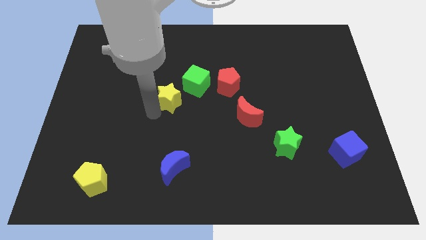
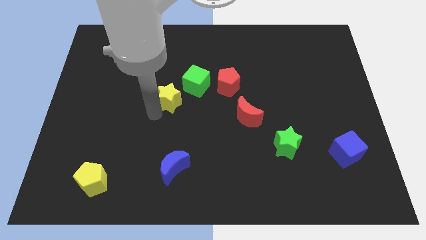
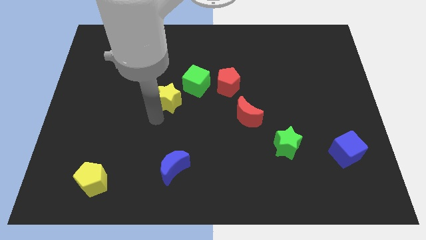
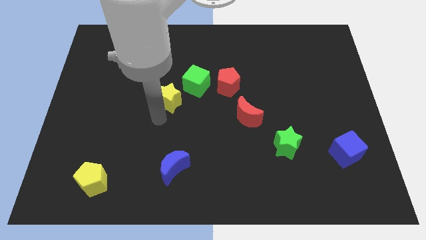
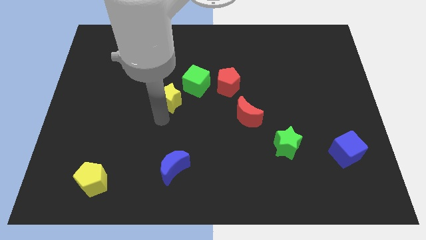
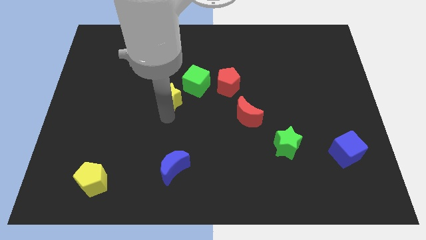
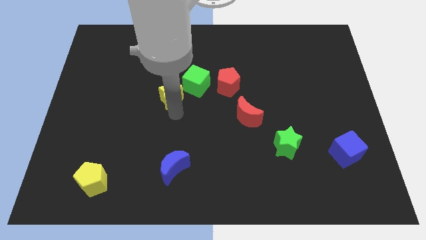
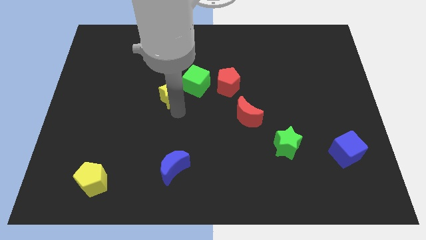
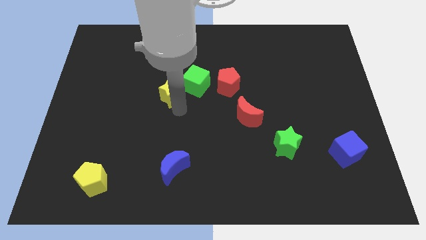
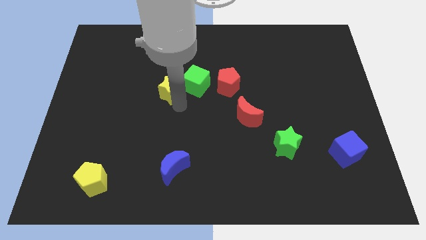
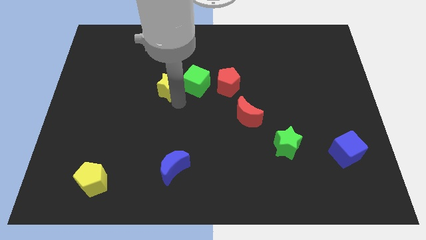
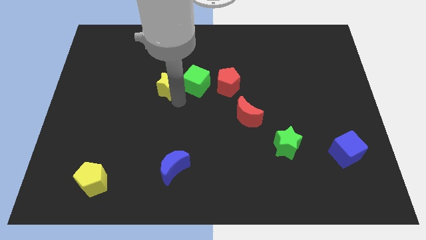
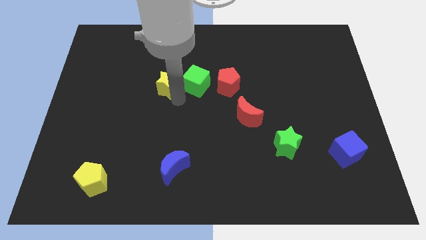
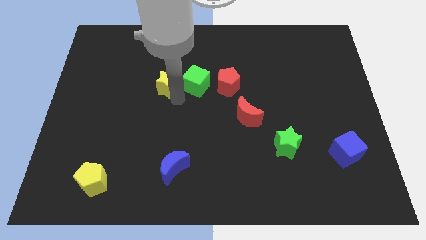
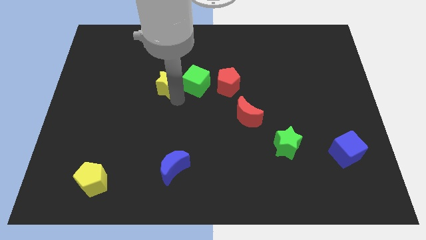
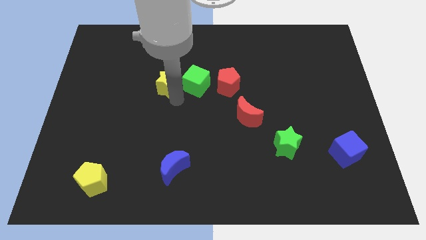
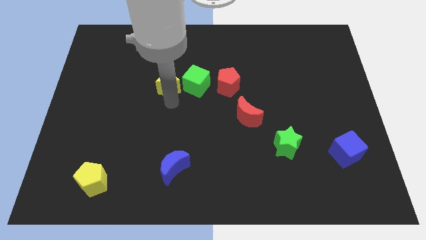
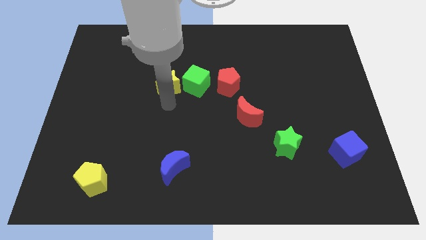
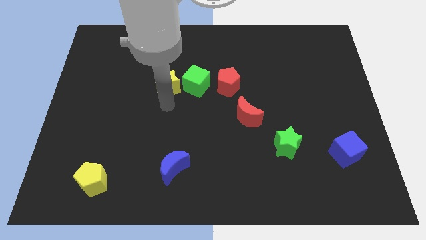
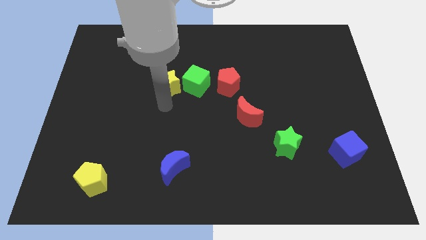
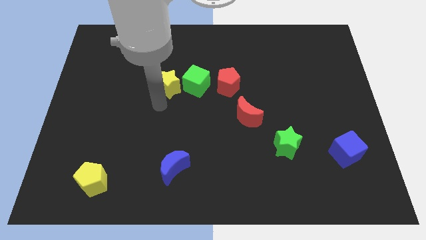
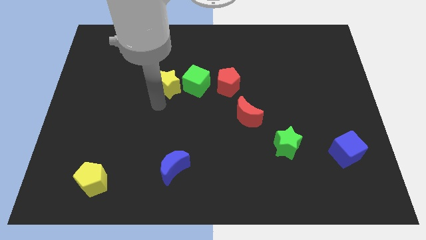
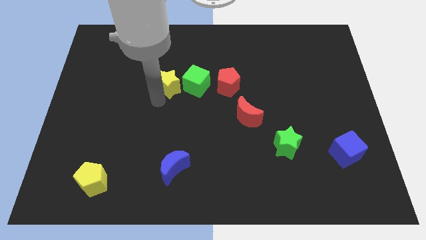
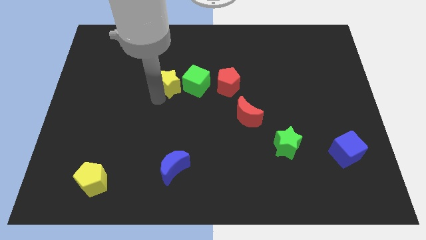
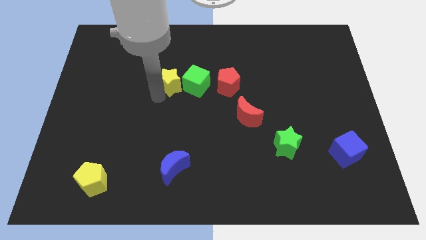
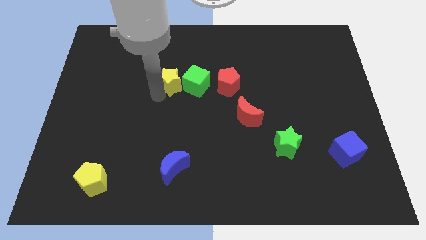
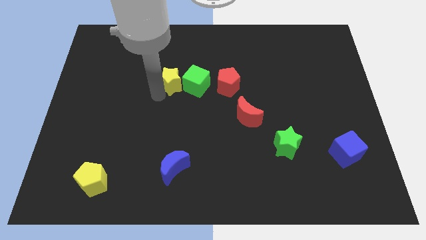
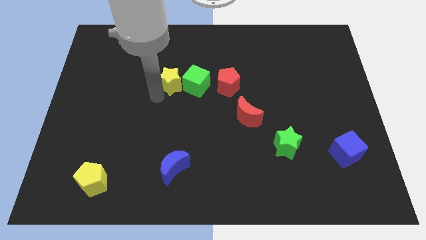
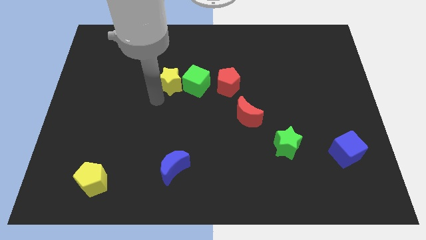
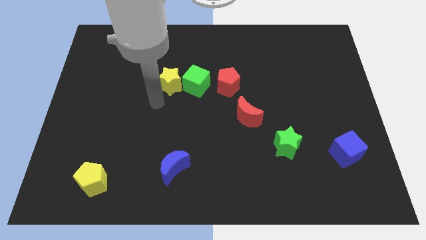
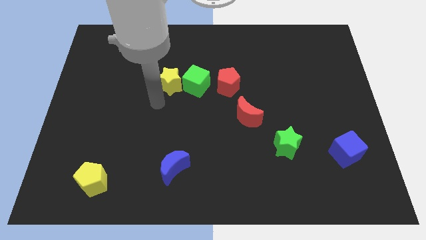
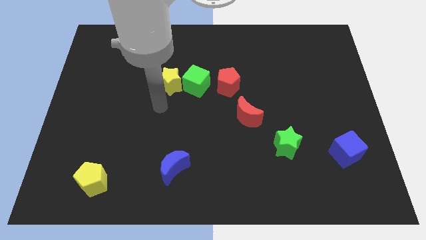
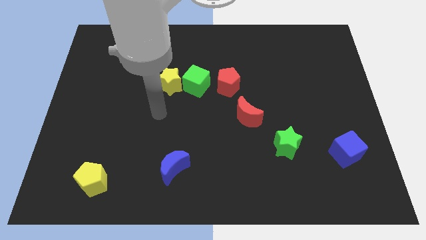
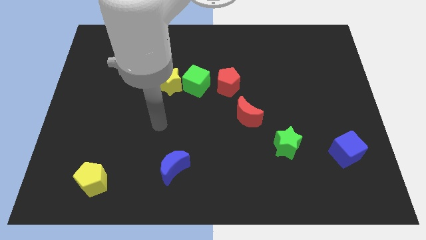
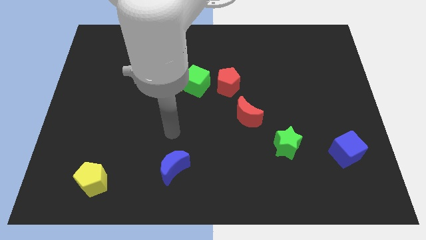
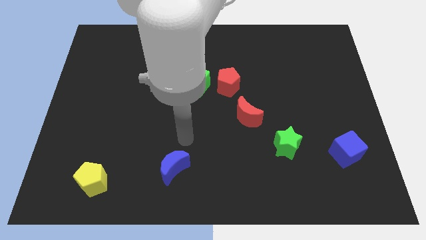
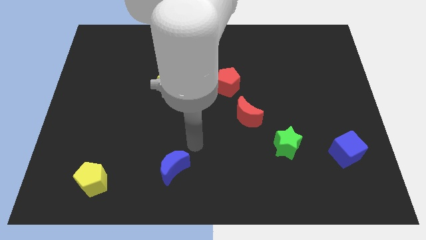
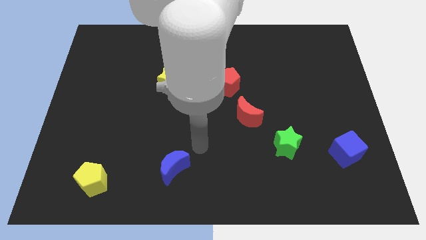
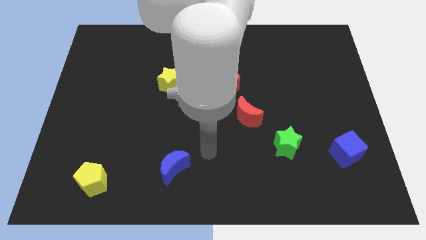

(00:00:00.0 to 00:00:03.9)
place a yellow star adjacent to the green cube

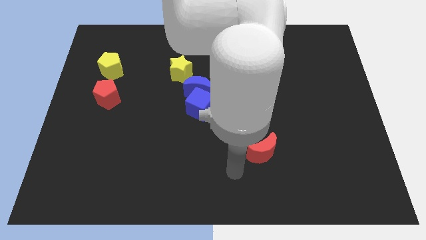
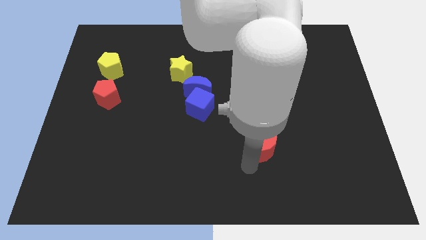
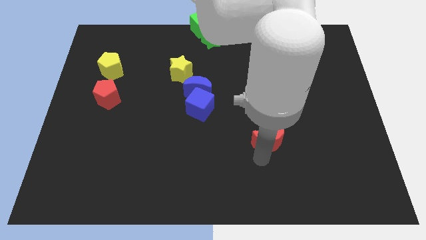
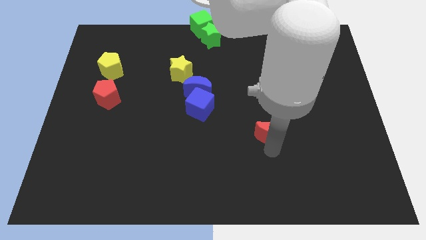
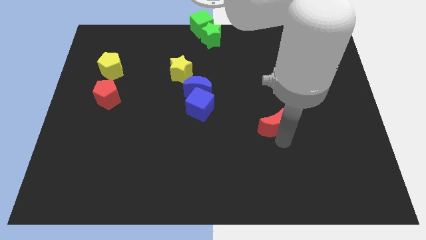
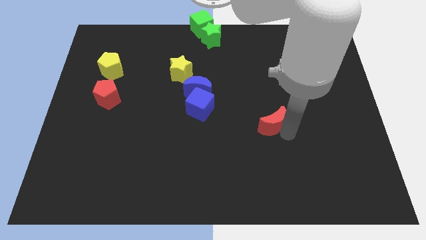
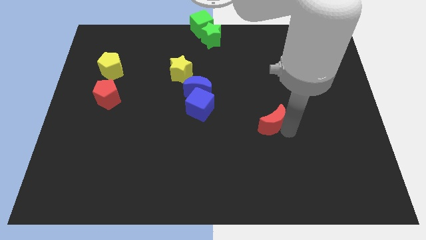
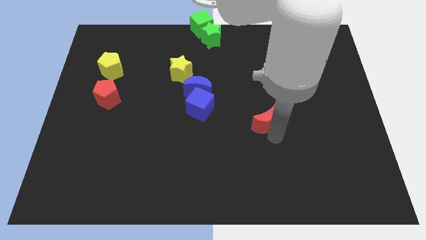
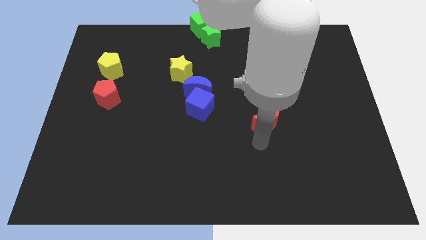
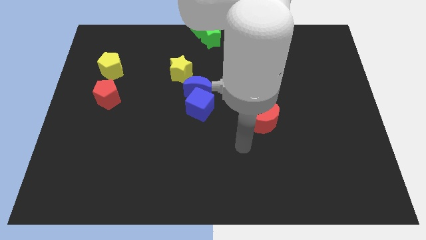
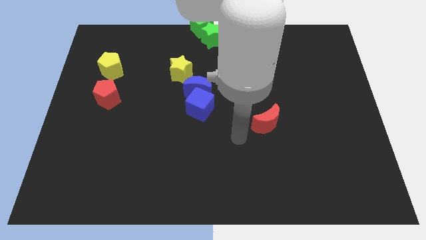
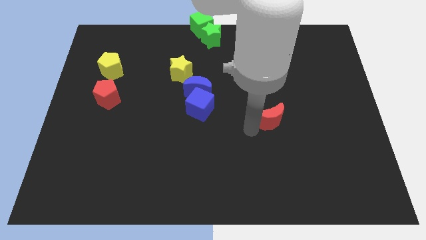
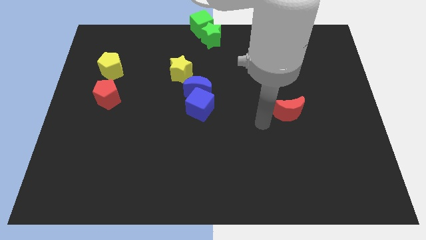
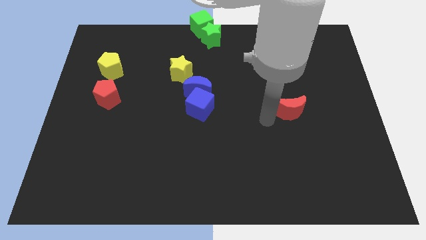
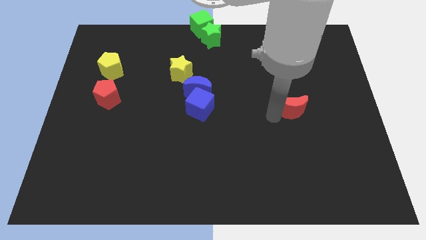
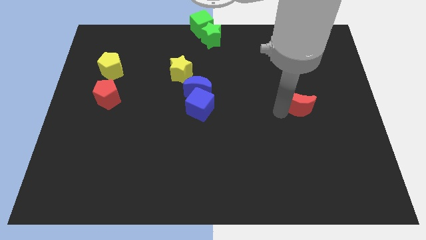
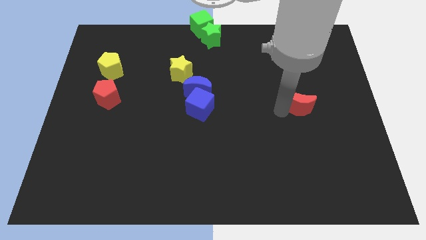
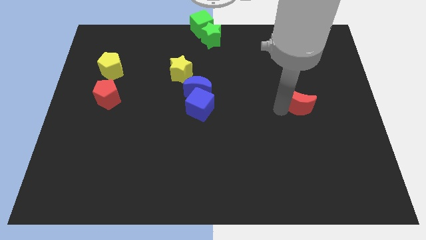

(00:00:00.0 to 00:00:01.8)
pull the red crescent to the right of the blue cube

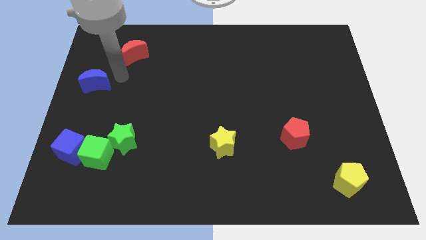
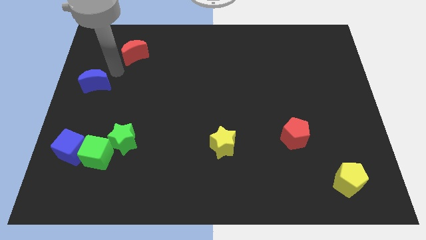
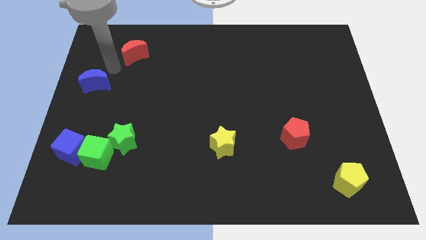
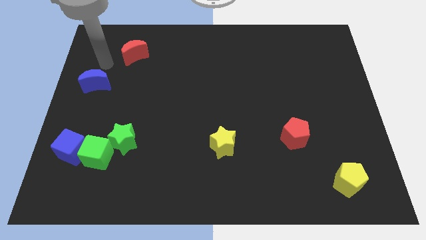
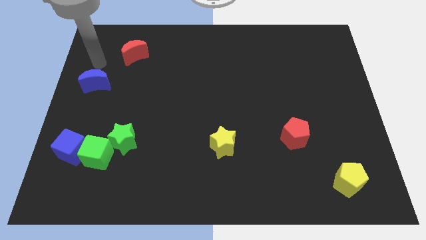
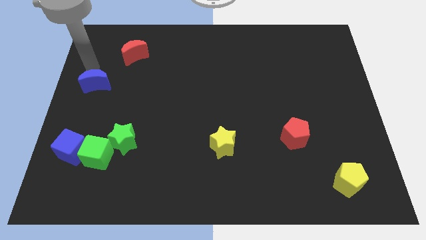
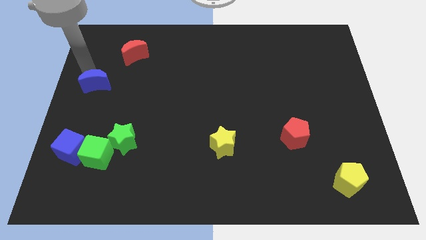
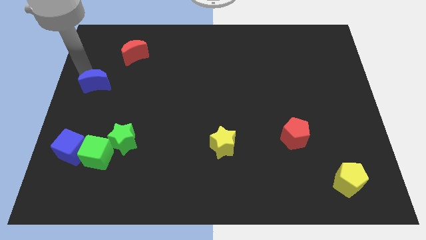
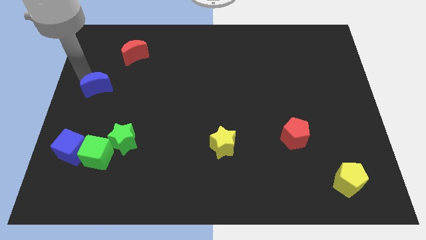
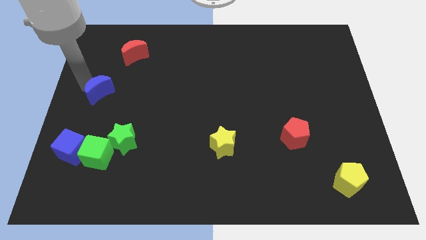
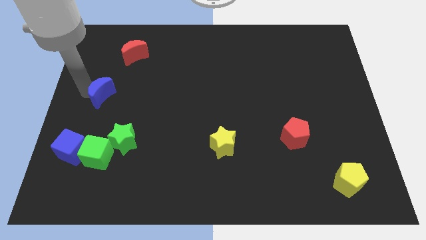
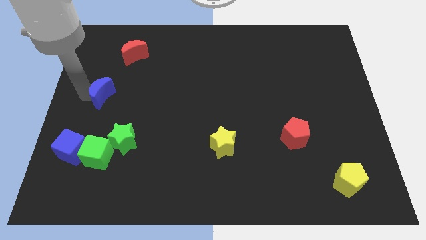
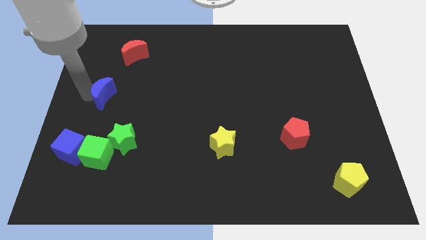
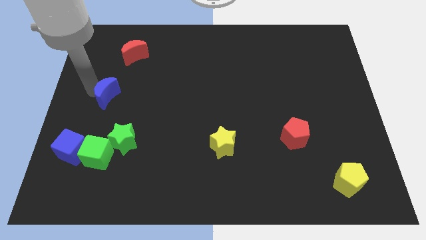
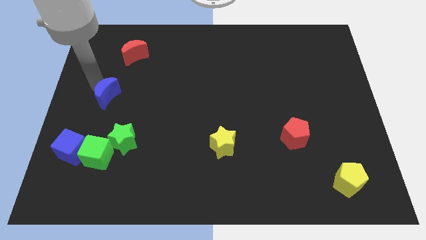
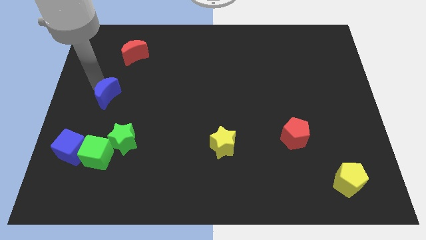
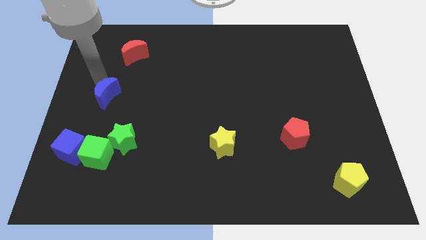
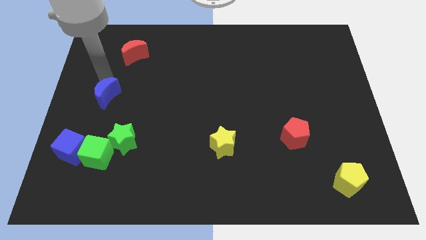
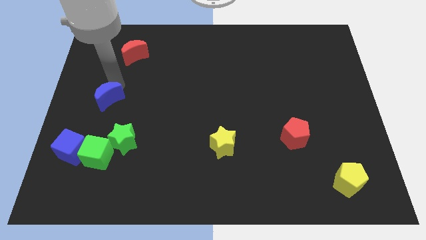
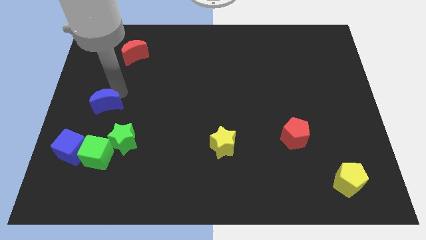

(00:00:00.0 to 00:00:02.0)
move the blue cube towards the blue cube

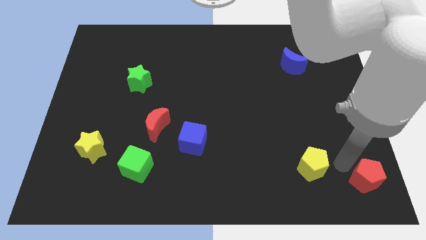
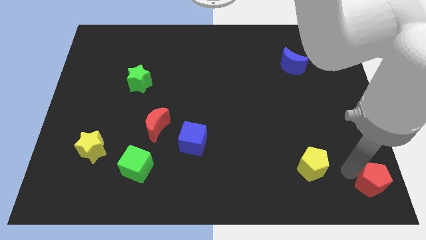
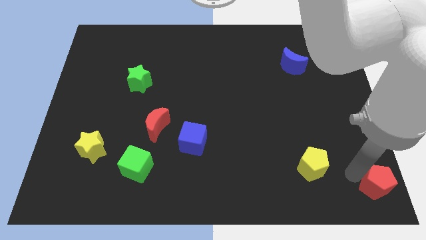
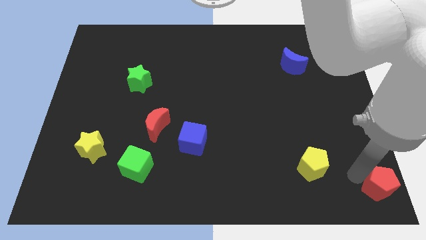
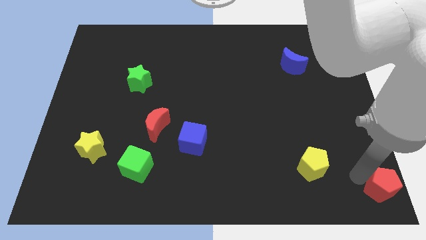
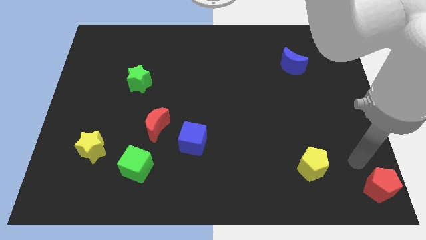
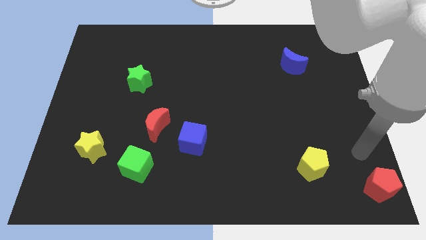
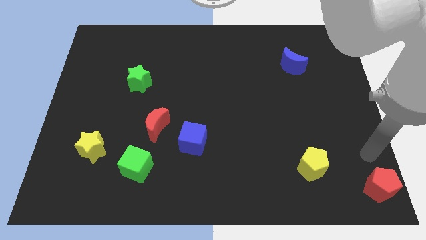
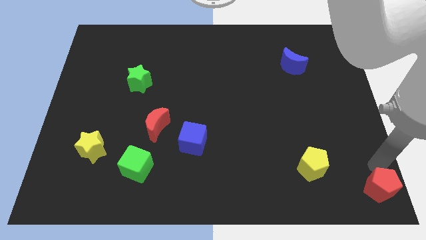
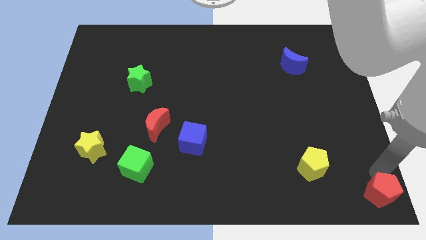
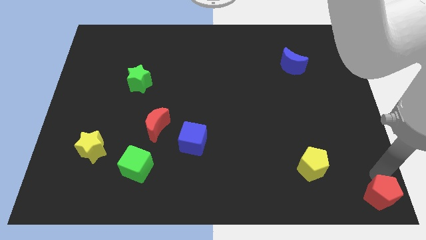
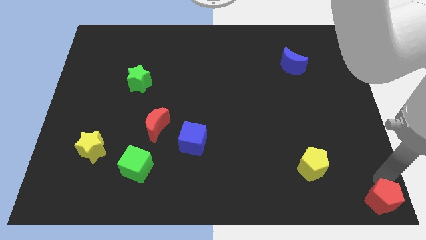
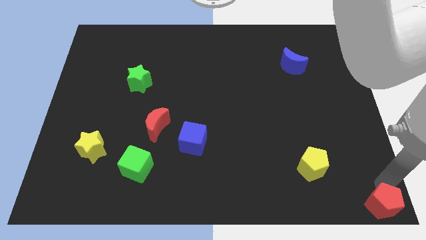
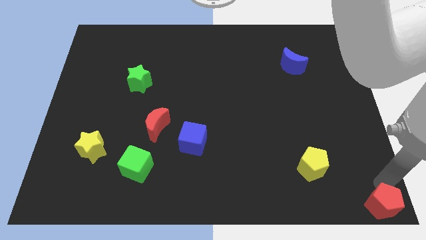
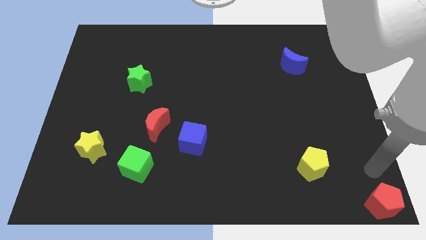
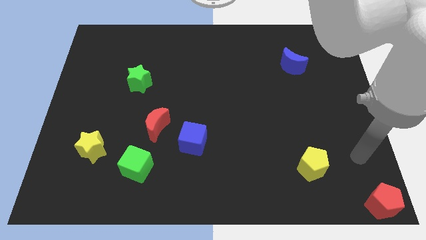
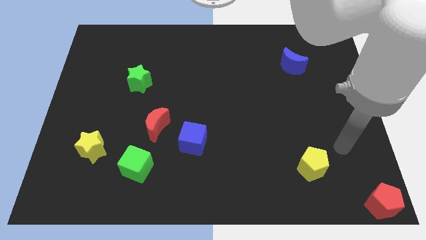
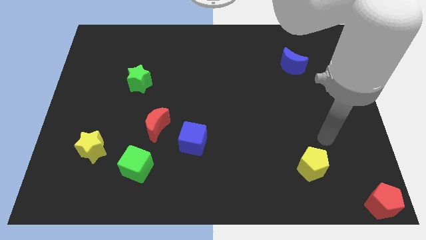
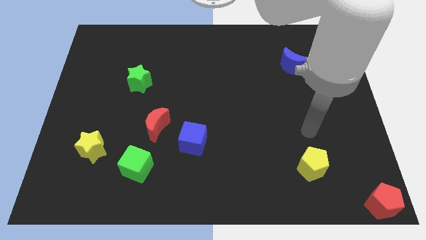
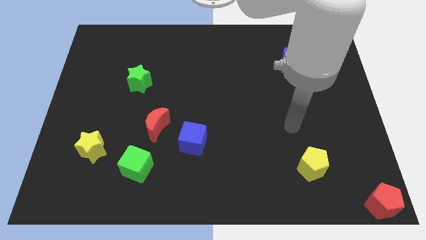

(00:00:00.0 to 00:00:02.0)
move red pentagon to the bottom right corner of the board
